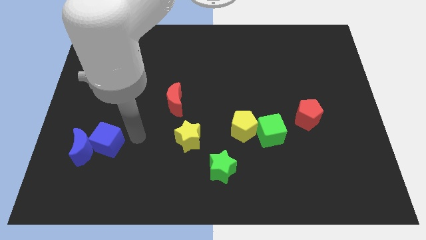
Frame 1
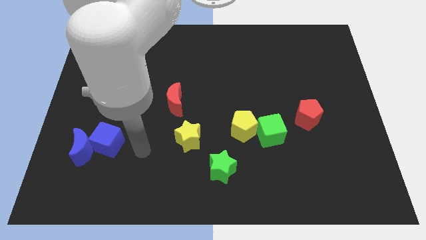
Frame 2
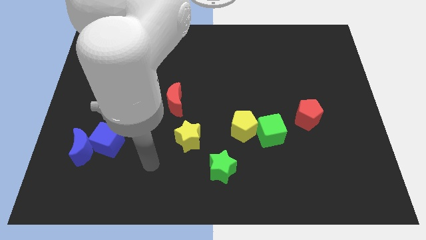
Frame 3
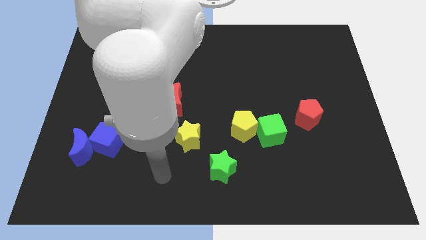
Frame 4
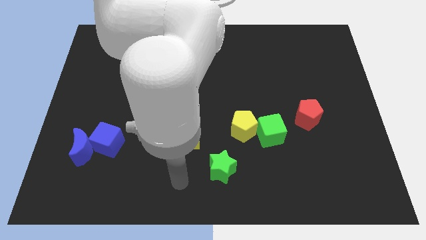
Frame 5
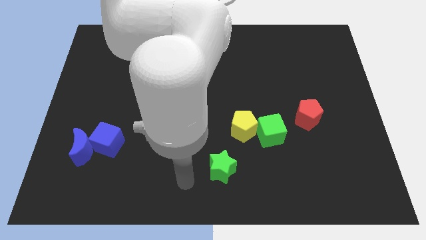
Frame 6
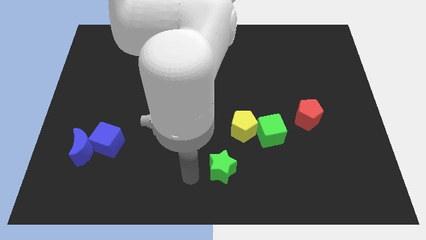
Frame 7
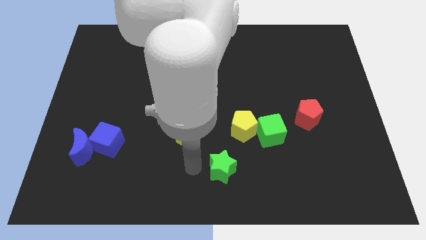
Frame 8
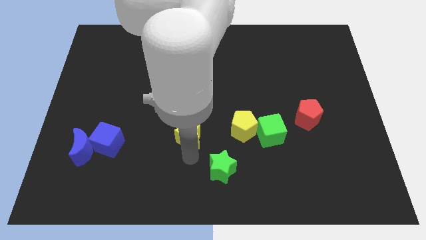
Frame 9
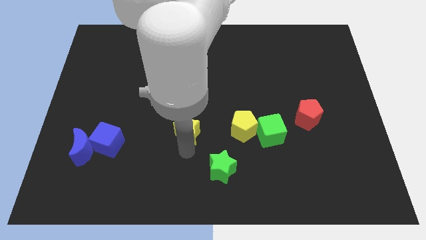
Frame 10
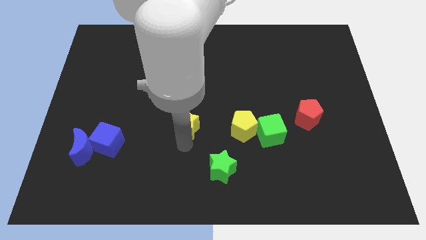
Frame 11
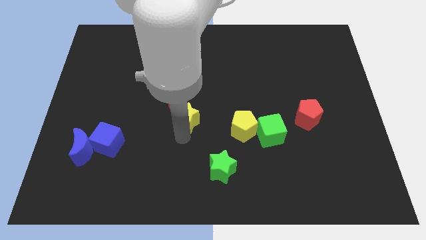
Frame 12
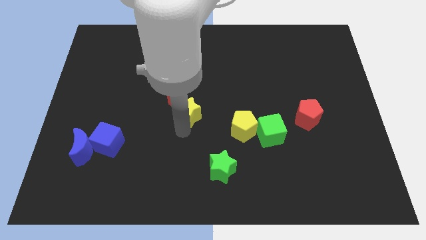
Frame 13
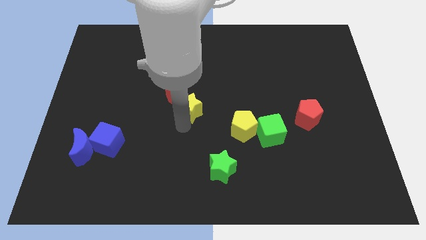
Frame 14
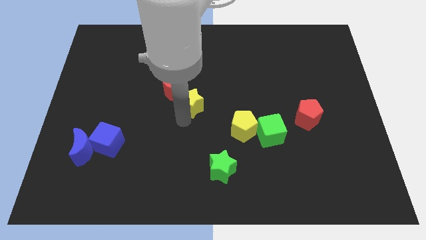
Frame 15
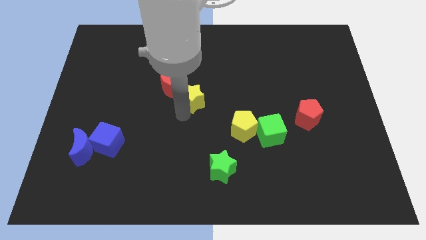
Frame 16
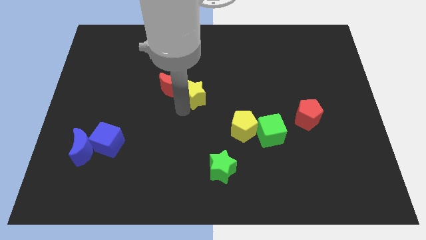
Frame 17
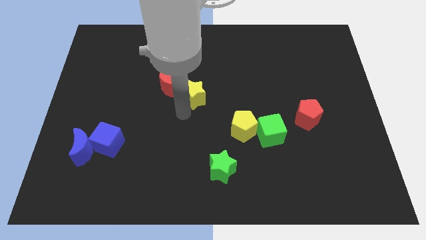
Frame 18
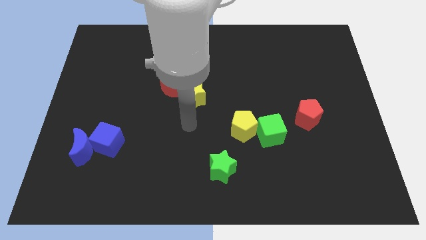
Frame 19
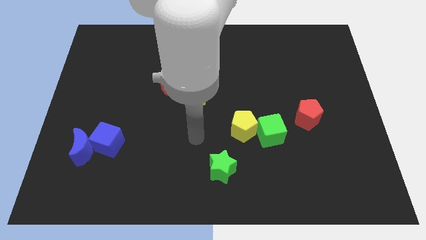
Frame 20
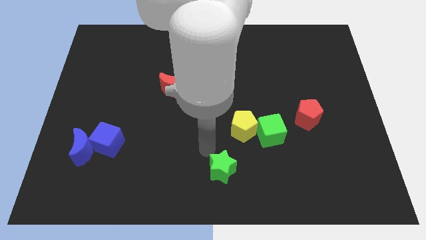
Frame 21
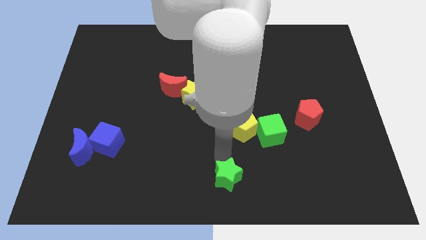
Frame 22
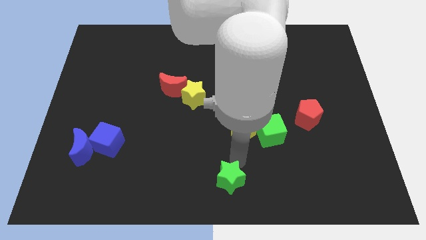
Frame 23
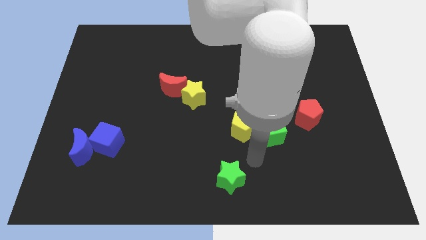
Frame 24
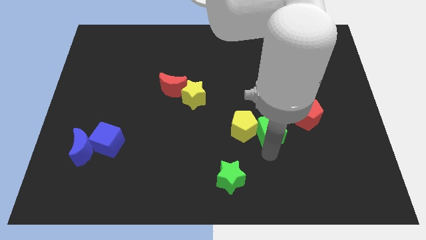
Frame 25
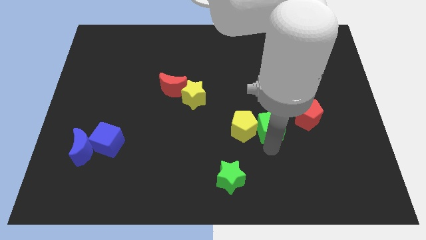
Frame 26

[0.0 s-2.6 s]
put the yellow star and the red crescent together

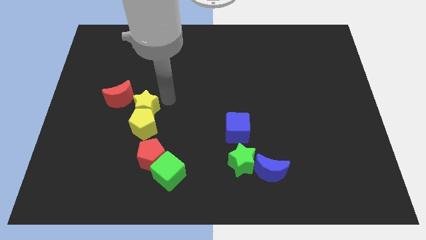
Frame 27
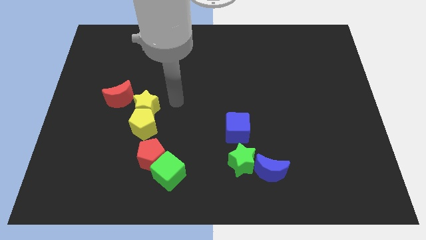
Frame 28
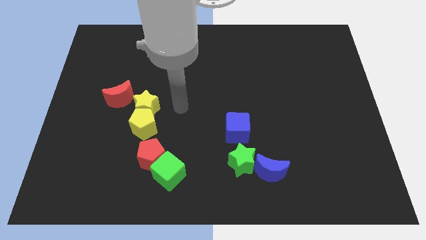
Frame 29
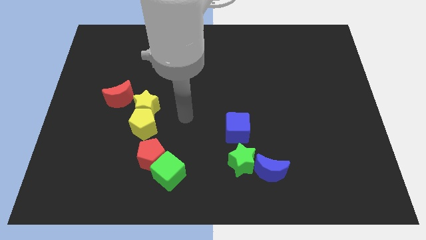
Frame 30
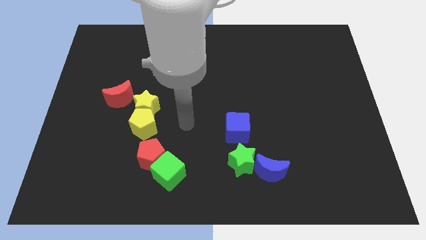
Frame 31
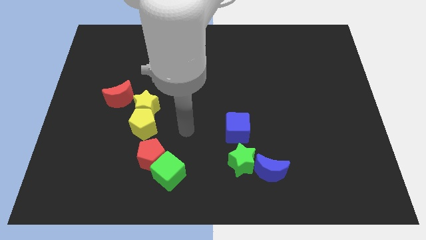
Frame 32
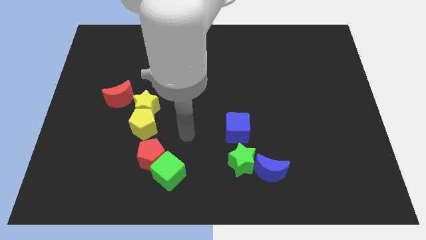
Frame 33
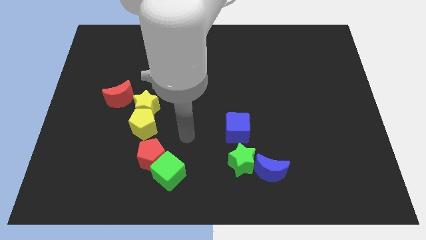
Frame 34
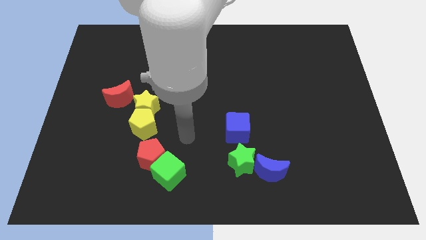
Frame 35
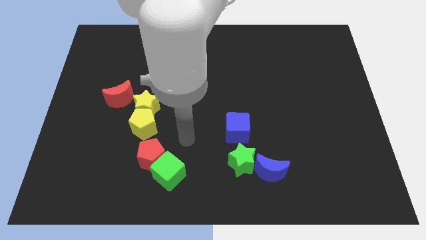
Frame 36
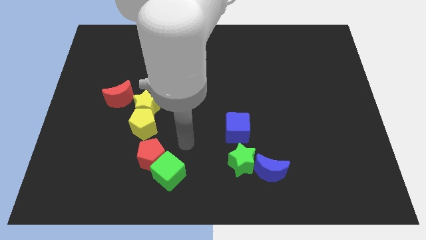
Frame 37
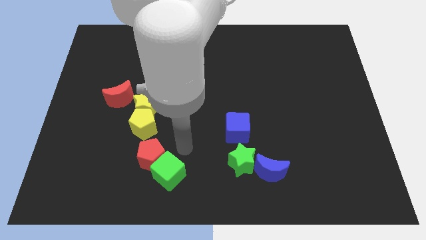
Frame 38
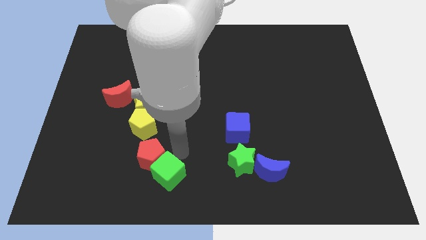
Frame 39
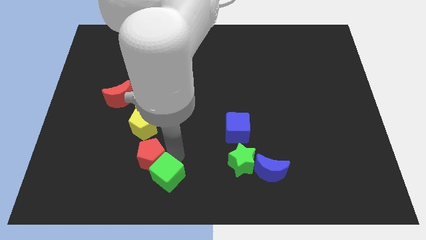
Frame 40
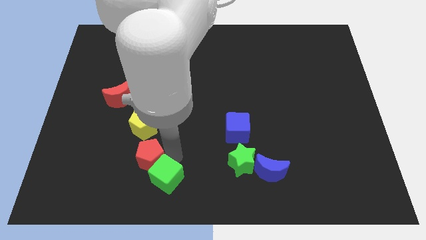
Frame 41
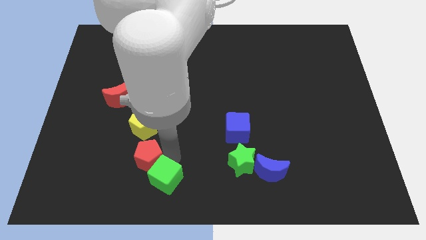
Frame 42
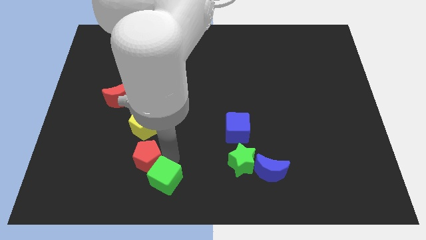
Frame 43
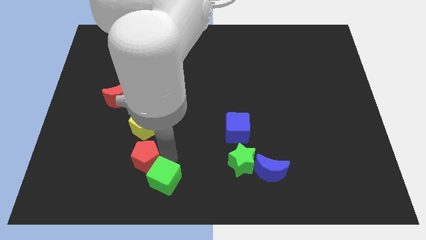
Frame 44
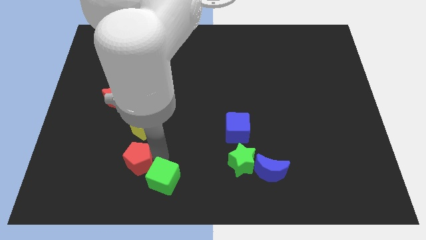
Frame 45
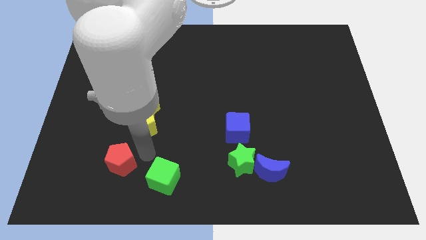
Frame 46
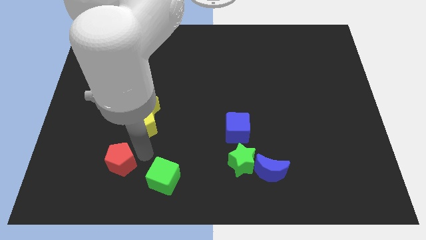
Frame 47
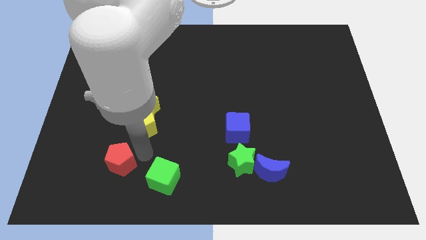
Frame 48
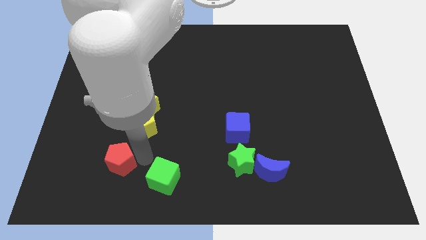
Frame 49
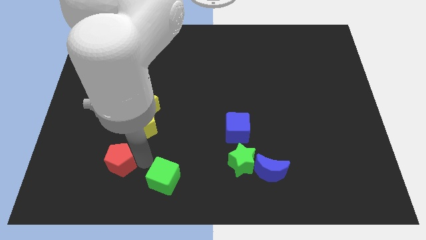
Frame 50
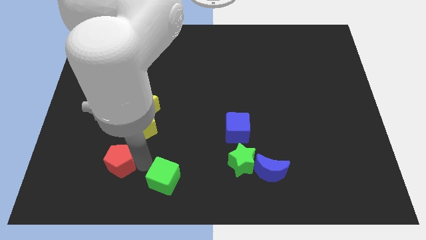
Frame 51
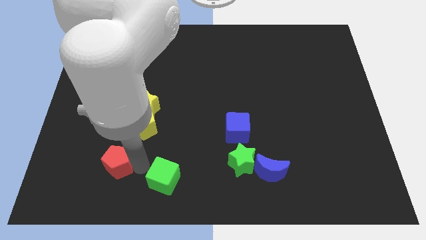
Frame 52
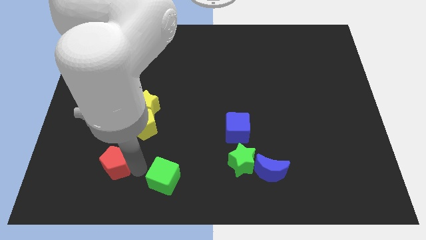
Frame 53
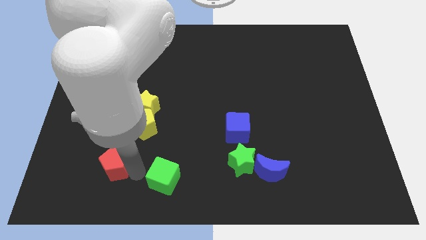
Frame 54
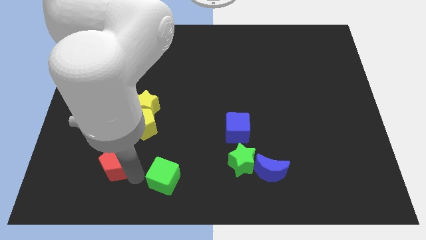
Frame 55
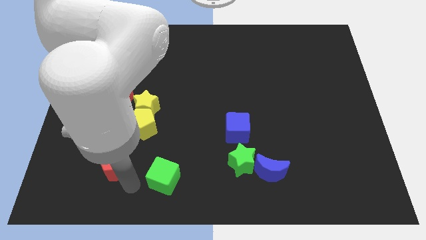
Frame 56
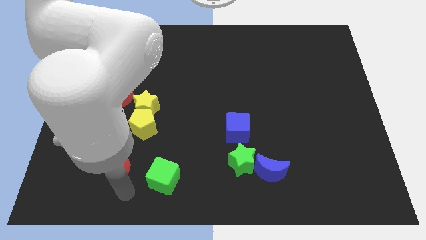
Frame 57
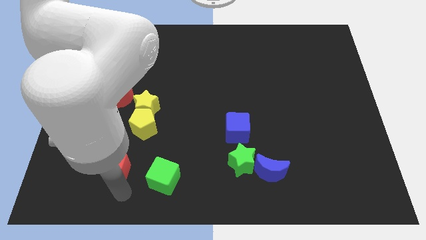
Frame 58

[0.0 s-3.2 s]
push the red pentagon to the left of the green cube

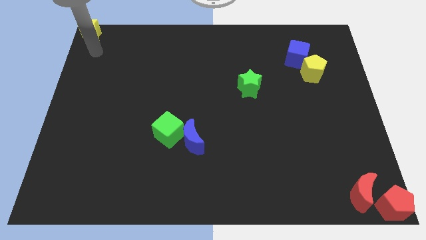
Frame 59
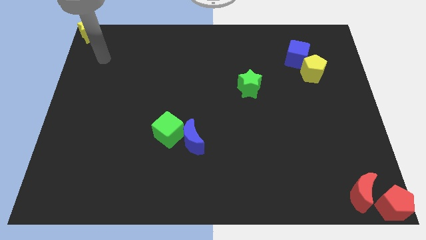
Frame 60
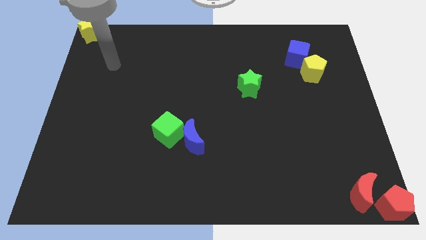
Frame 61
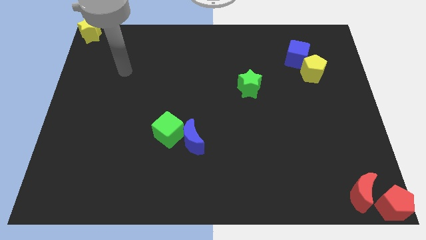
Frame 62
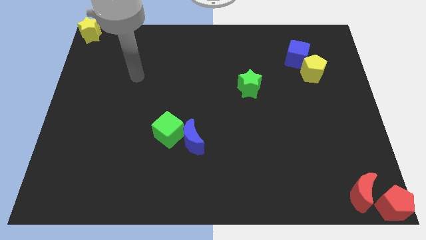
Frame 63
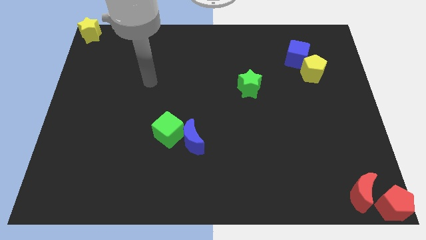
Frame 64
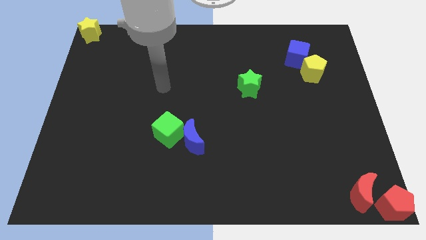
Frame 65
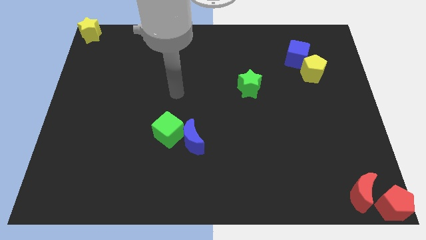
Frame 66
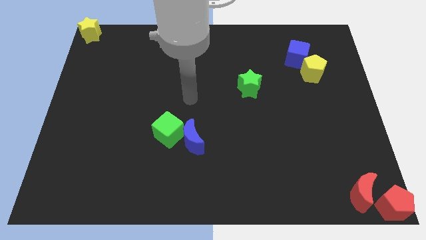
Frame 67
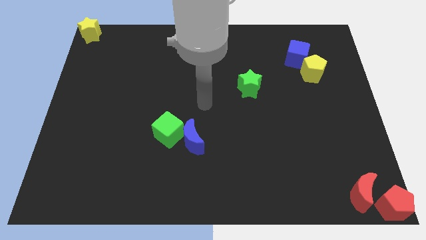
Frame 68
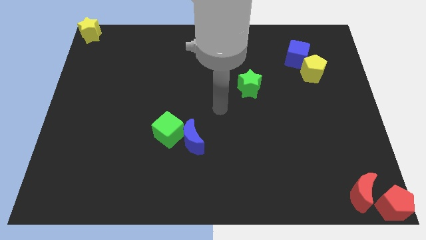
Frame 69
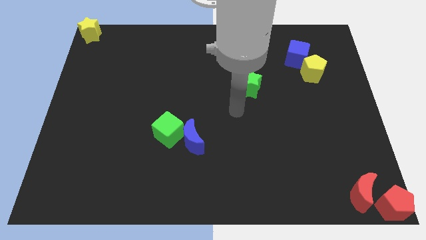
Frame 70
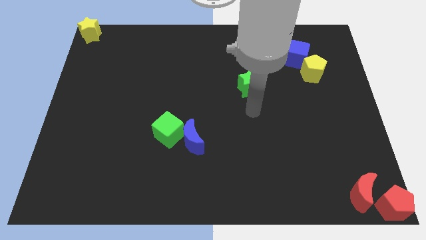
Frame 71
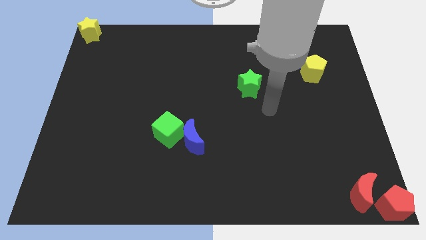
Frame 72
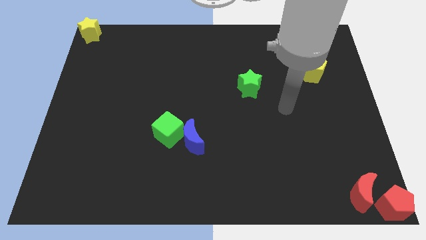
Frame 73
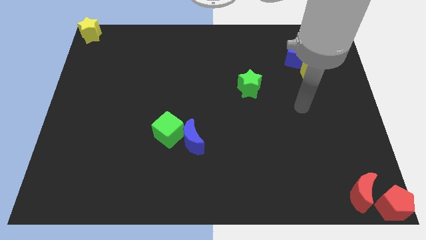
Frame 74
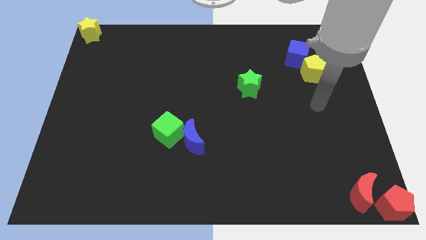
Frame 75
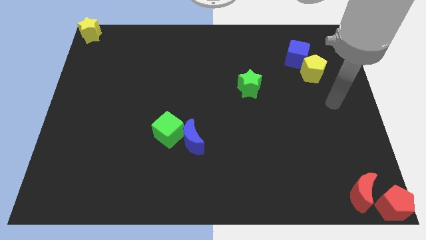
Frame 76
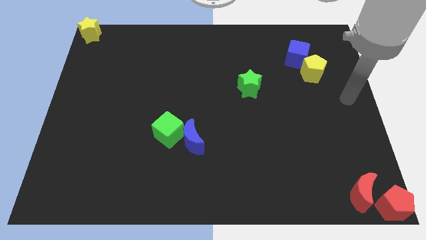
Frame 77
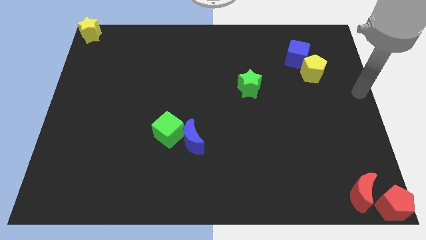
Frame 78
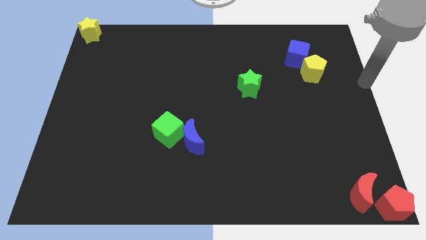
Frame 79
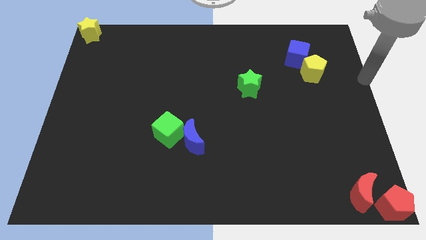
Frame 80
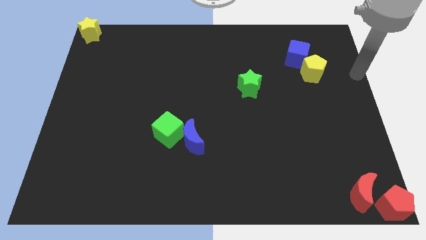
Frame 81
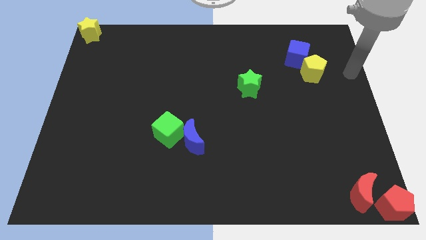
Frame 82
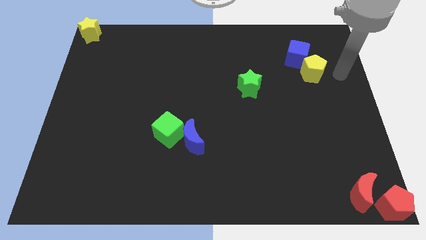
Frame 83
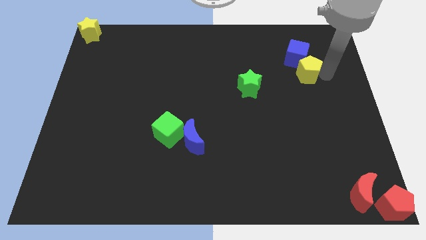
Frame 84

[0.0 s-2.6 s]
place your arm to the right side of yellow pentagon

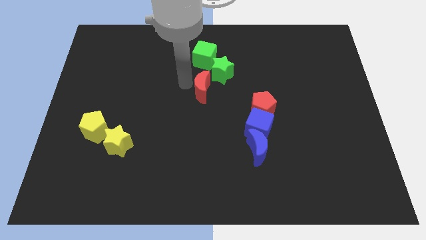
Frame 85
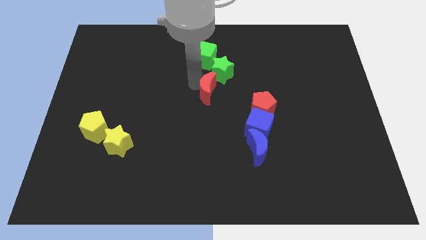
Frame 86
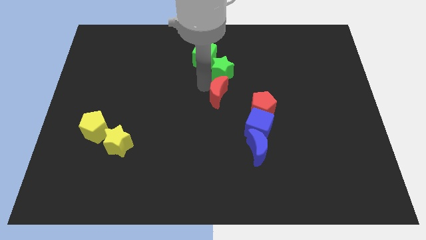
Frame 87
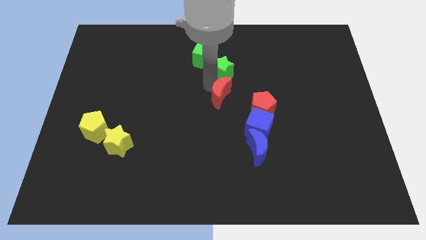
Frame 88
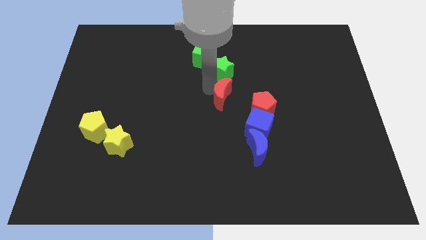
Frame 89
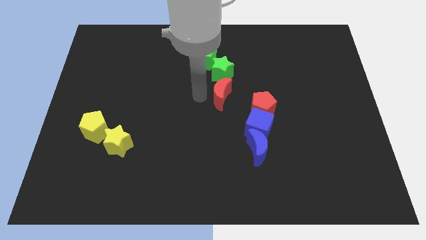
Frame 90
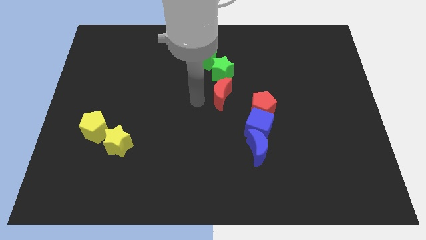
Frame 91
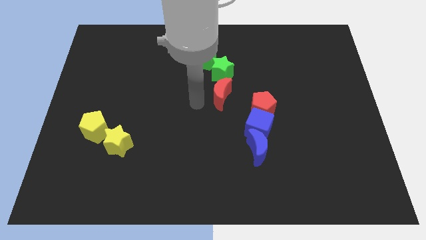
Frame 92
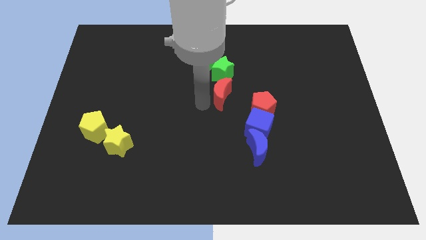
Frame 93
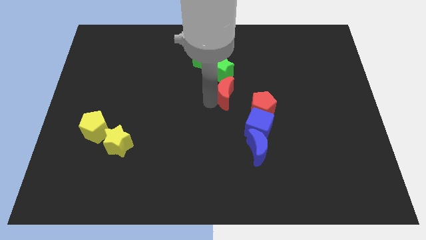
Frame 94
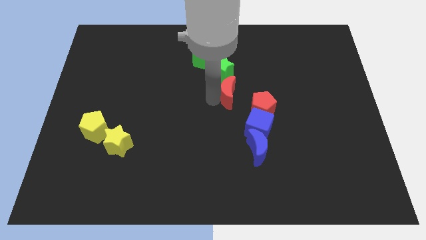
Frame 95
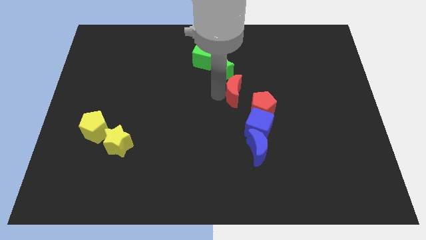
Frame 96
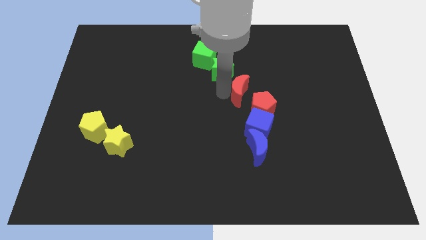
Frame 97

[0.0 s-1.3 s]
push the red crescent near to the red pentagon
